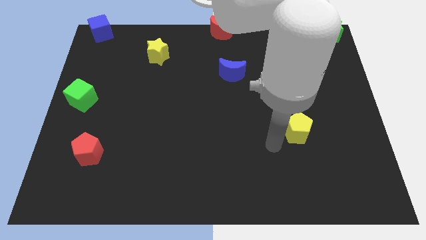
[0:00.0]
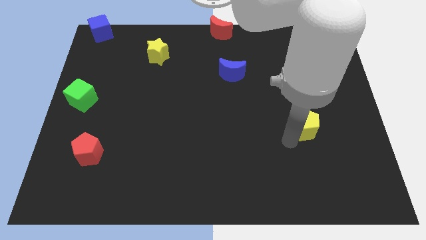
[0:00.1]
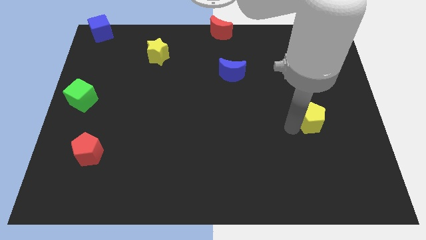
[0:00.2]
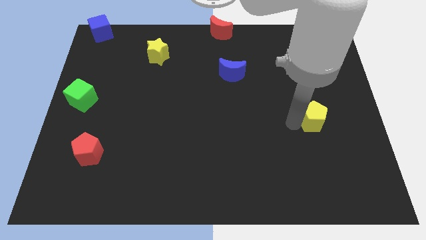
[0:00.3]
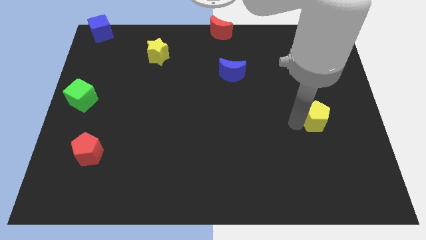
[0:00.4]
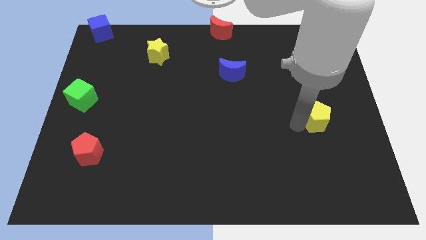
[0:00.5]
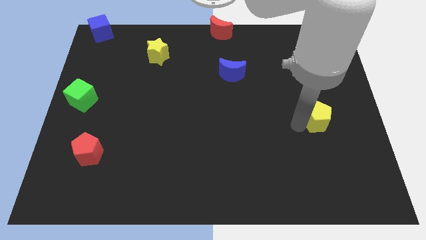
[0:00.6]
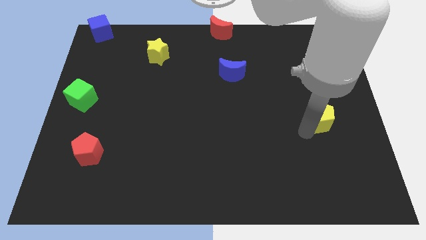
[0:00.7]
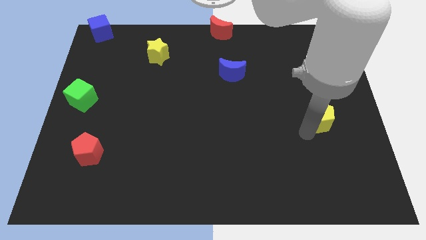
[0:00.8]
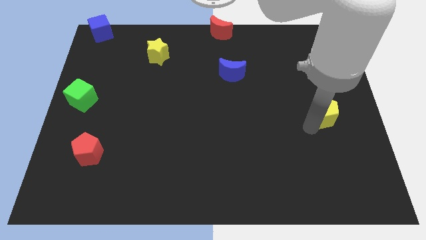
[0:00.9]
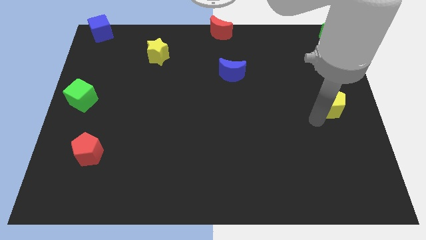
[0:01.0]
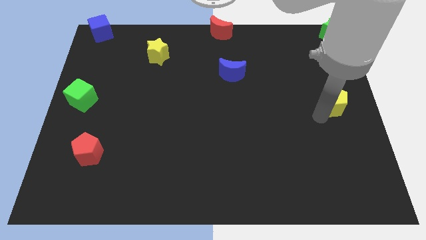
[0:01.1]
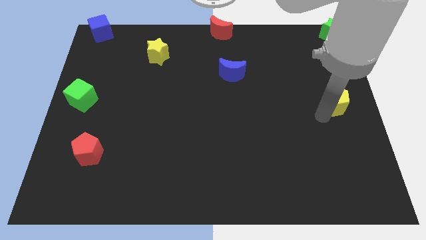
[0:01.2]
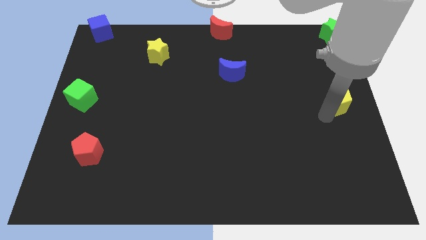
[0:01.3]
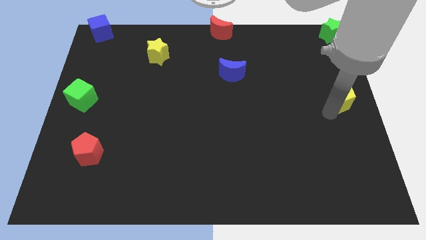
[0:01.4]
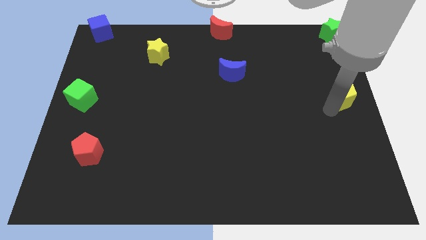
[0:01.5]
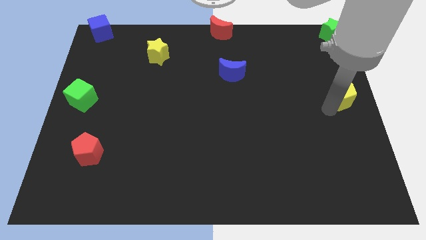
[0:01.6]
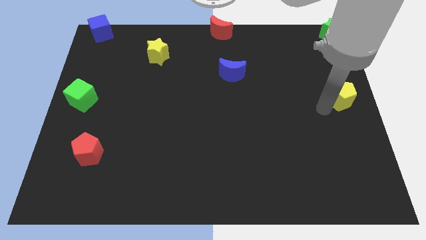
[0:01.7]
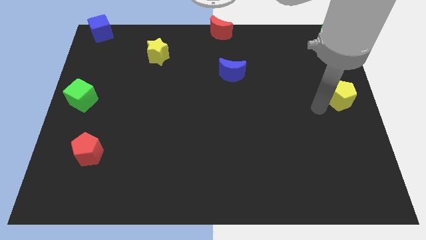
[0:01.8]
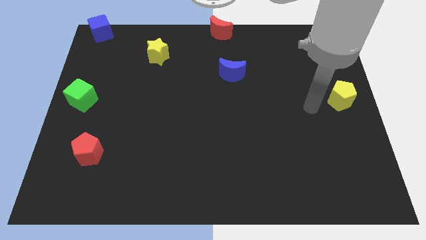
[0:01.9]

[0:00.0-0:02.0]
push the yellow pentagon vertically below the green star

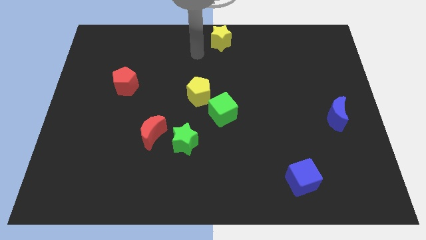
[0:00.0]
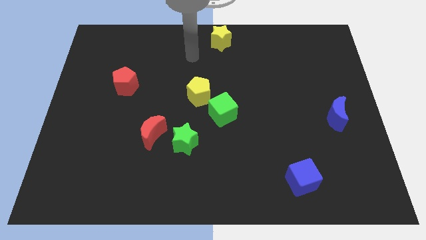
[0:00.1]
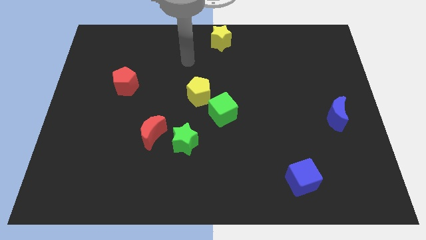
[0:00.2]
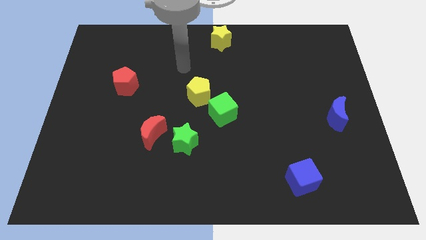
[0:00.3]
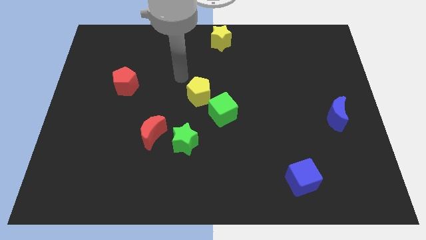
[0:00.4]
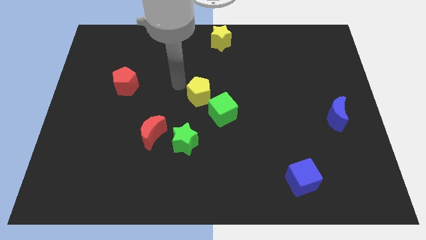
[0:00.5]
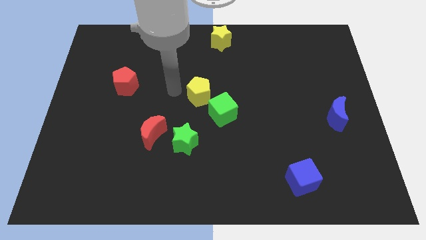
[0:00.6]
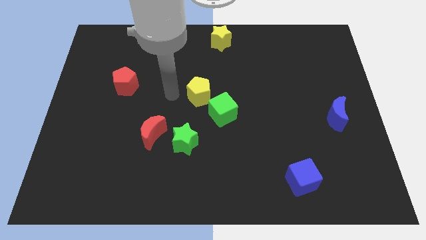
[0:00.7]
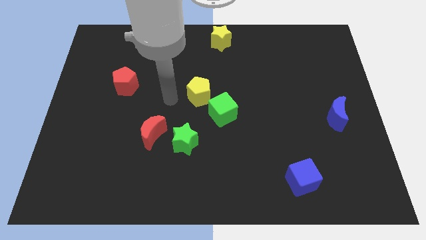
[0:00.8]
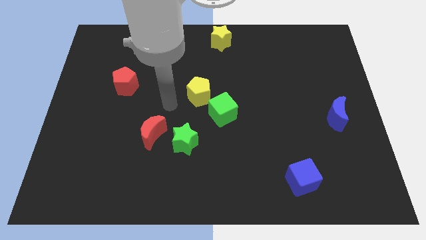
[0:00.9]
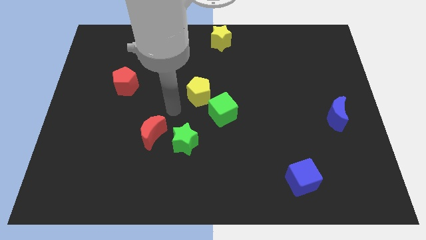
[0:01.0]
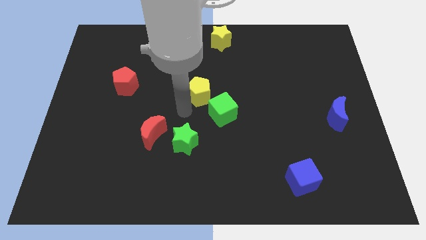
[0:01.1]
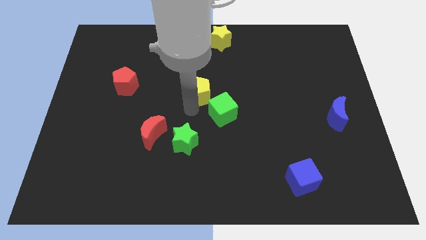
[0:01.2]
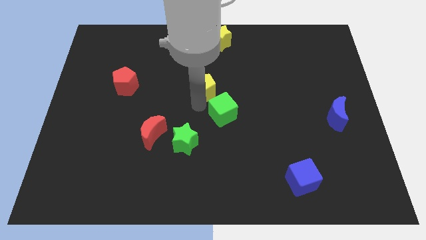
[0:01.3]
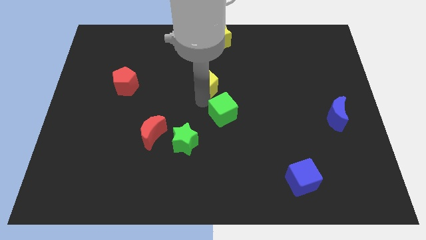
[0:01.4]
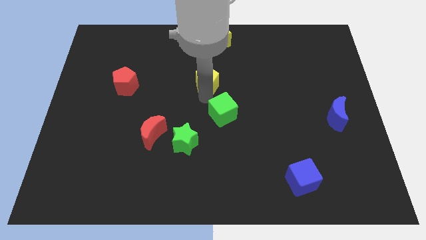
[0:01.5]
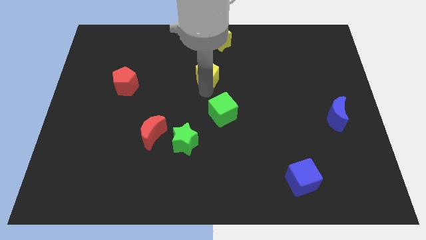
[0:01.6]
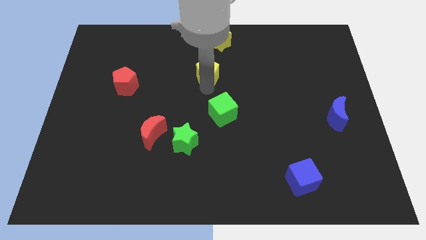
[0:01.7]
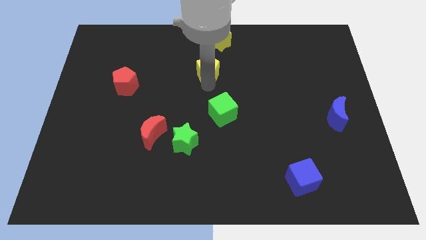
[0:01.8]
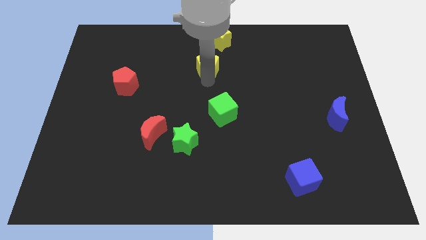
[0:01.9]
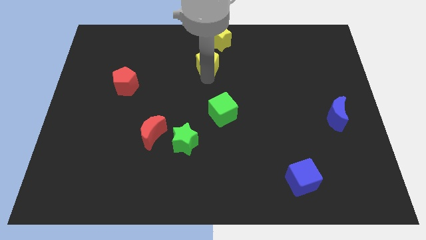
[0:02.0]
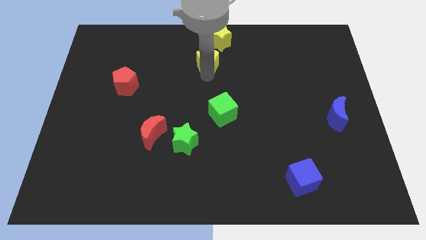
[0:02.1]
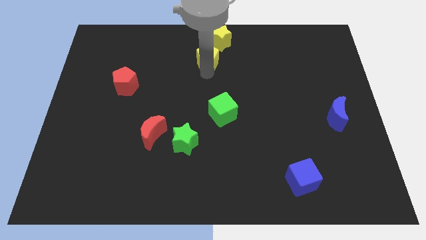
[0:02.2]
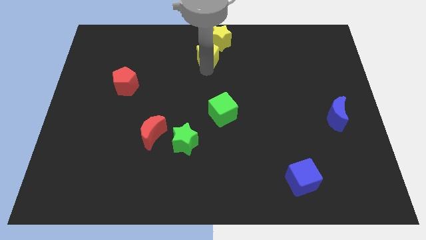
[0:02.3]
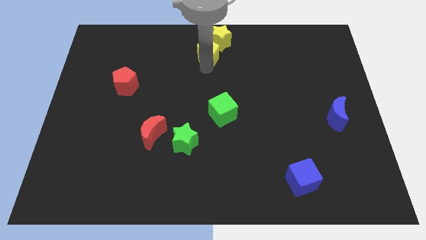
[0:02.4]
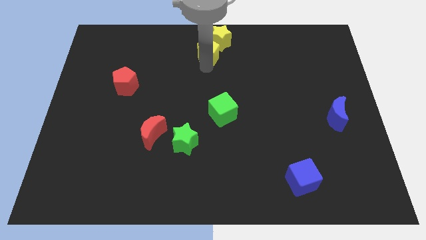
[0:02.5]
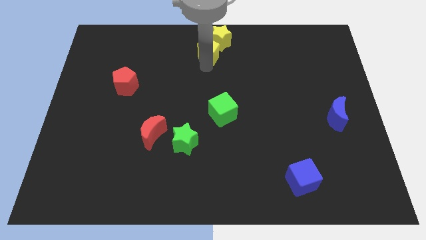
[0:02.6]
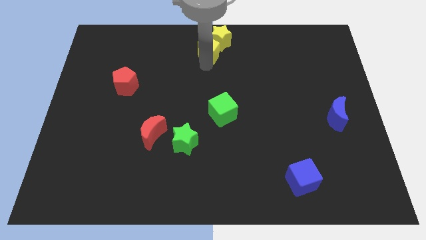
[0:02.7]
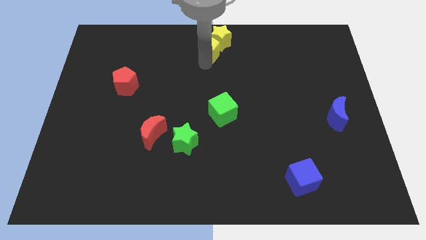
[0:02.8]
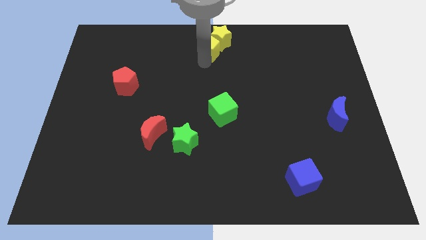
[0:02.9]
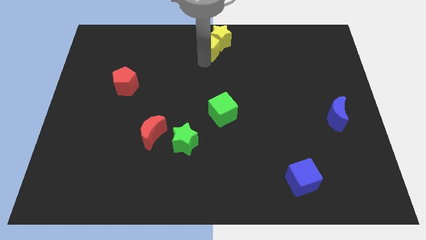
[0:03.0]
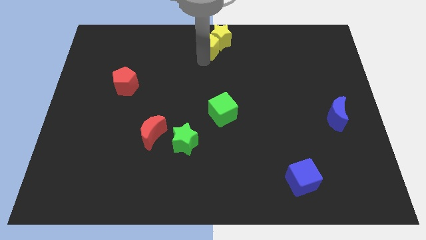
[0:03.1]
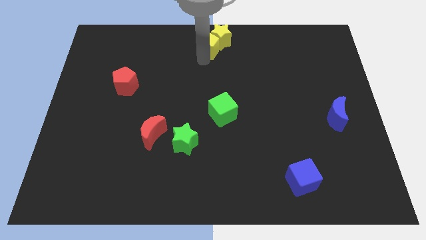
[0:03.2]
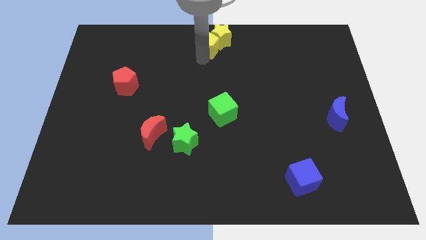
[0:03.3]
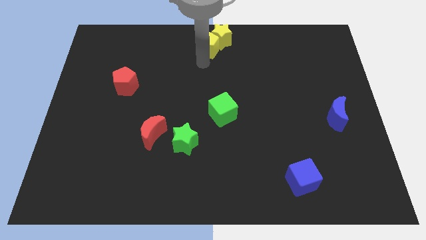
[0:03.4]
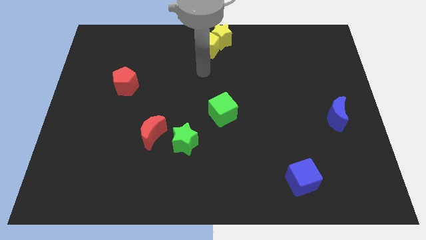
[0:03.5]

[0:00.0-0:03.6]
push the yellow pentagon into the yellow star

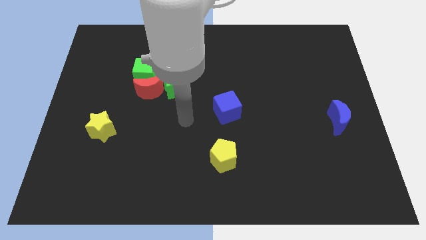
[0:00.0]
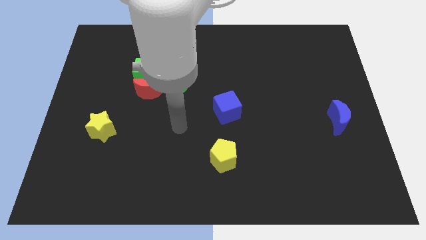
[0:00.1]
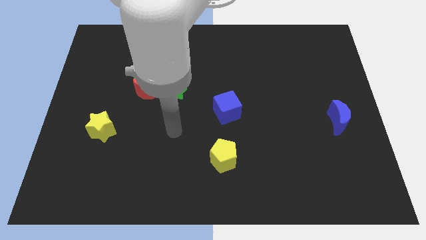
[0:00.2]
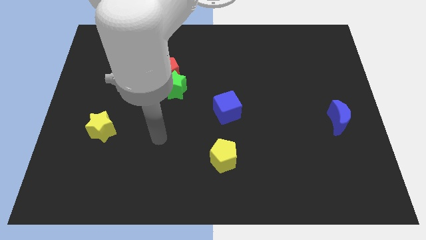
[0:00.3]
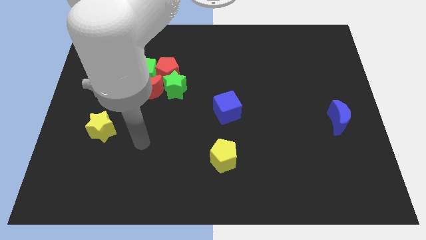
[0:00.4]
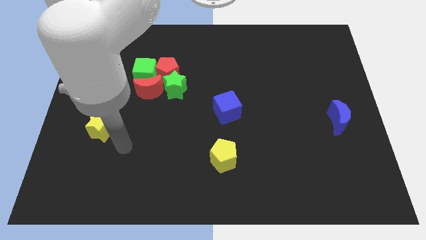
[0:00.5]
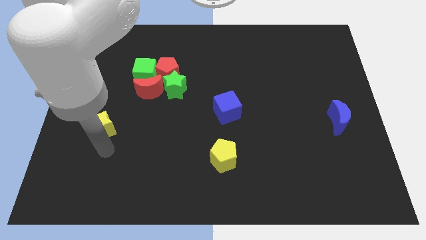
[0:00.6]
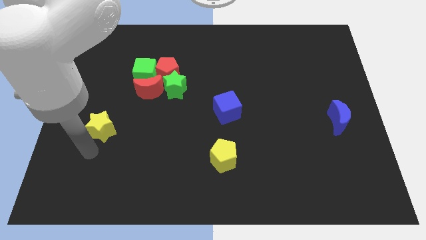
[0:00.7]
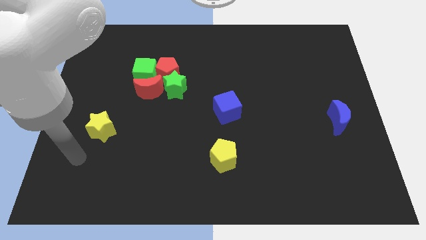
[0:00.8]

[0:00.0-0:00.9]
place the arm below the yellow star

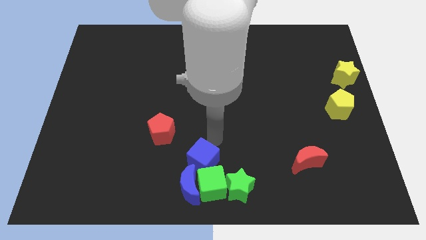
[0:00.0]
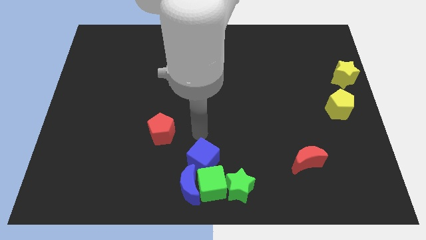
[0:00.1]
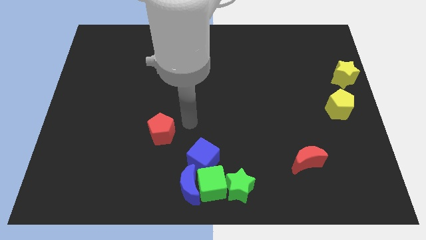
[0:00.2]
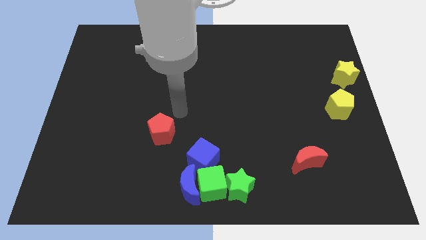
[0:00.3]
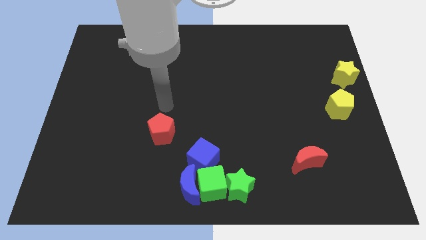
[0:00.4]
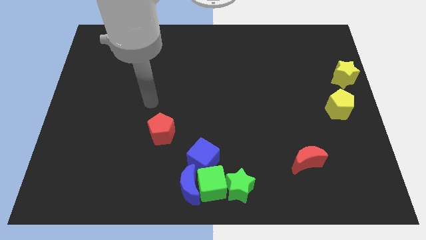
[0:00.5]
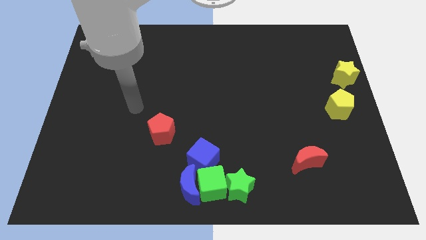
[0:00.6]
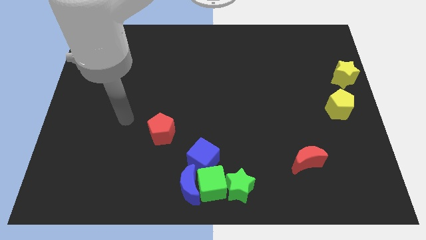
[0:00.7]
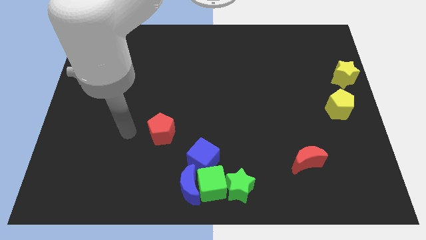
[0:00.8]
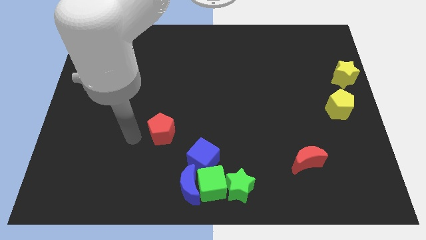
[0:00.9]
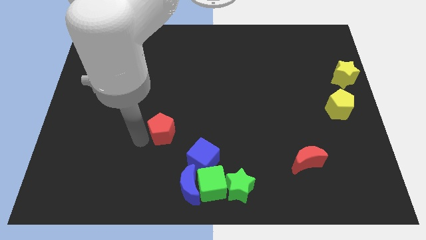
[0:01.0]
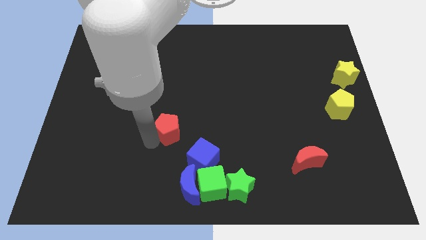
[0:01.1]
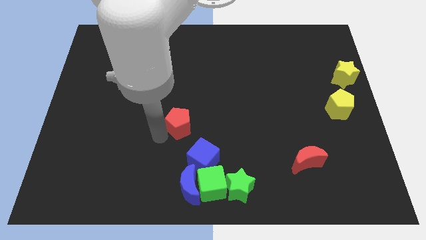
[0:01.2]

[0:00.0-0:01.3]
move your arm away from the blue cube

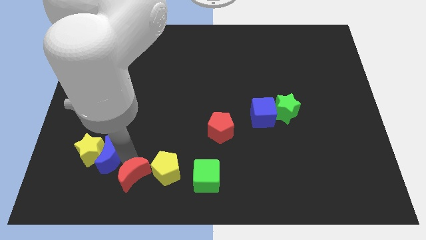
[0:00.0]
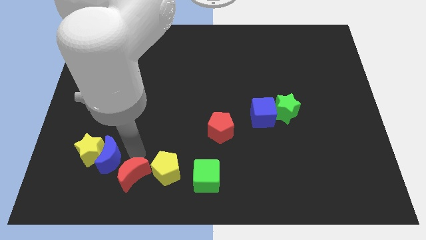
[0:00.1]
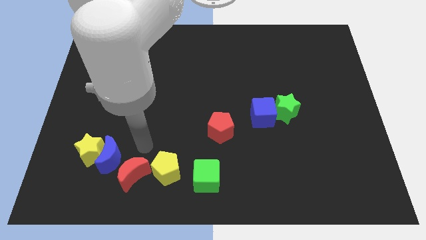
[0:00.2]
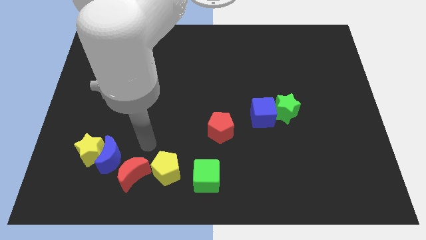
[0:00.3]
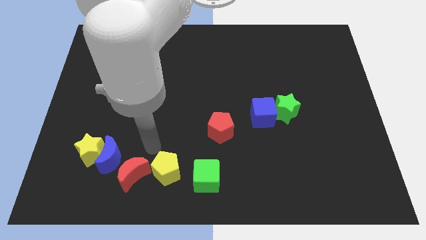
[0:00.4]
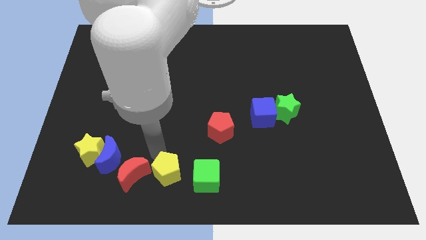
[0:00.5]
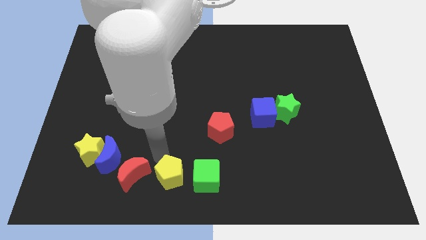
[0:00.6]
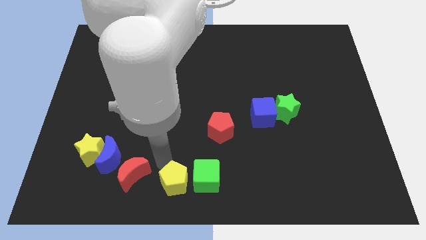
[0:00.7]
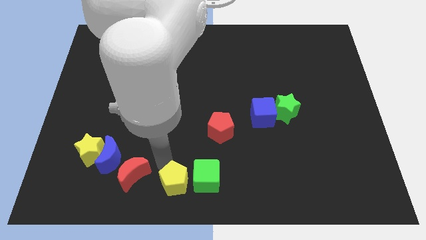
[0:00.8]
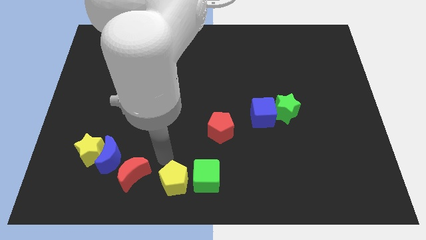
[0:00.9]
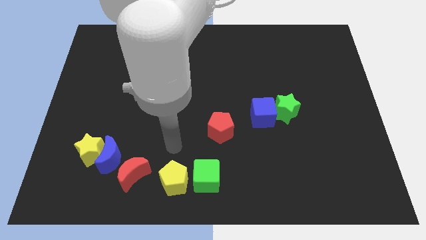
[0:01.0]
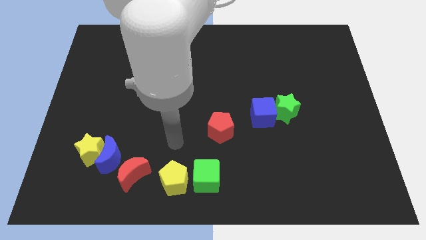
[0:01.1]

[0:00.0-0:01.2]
place the yellow pentagon to the left side of the green cube
